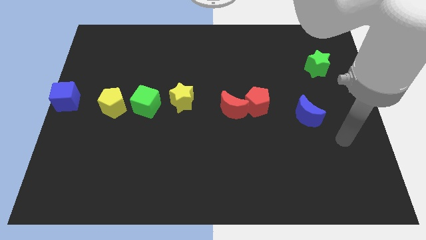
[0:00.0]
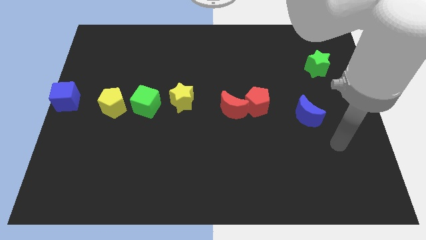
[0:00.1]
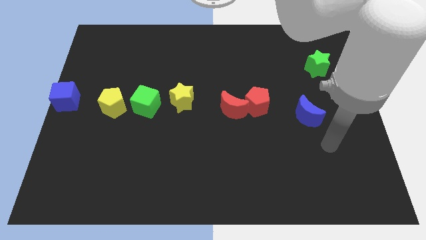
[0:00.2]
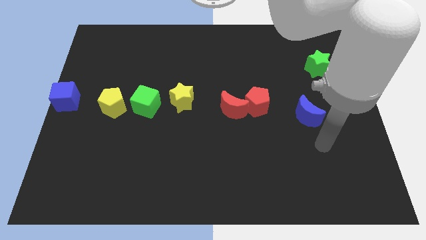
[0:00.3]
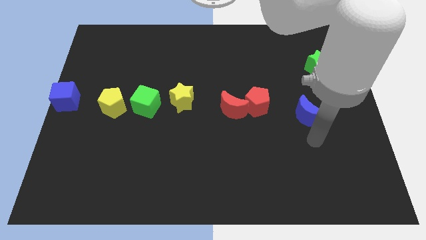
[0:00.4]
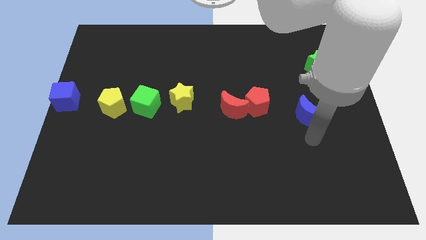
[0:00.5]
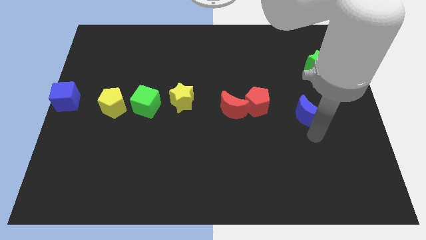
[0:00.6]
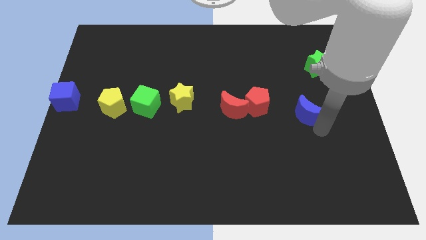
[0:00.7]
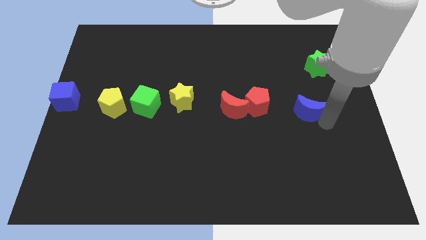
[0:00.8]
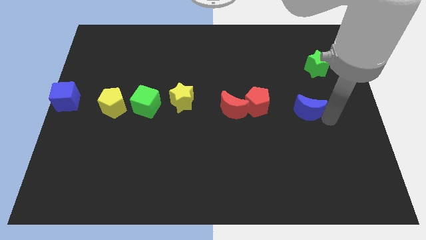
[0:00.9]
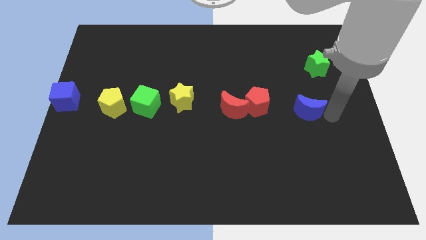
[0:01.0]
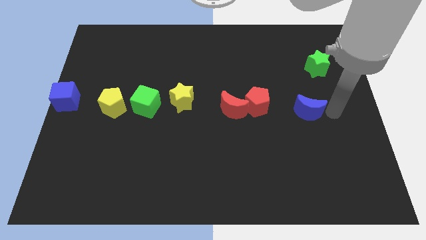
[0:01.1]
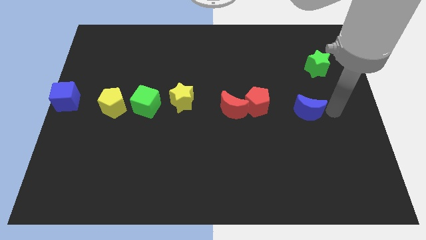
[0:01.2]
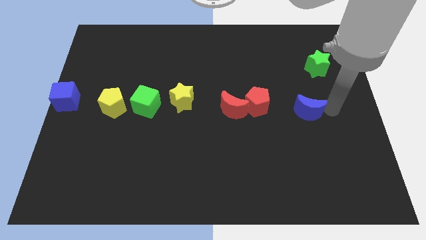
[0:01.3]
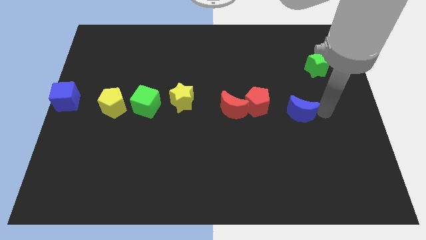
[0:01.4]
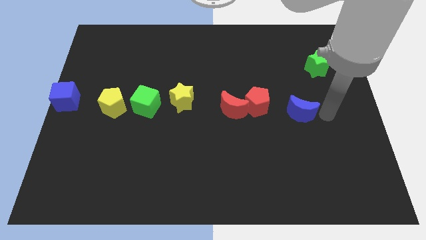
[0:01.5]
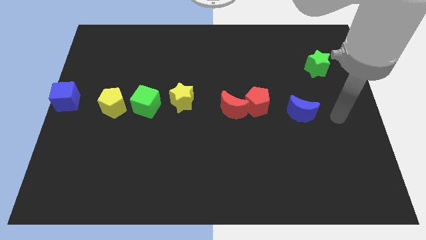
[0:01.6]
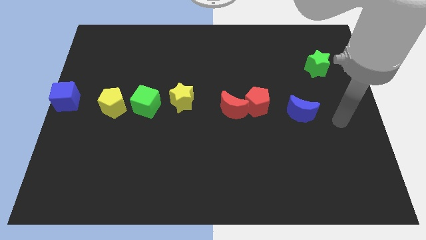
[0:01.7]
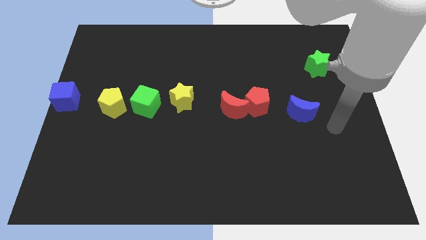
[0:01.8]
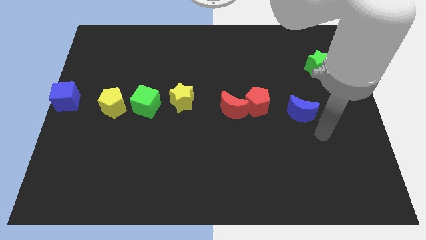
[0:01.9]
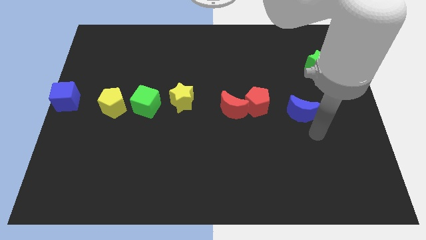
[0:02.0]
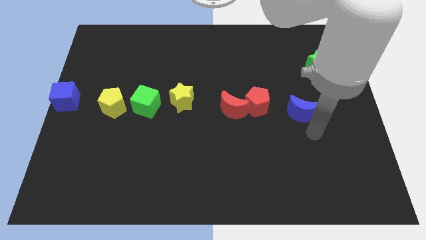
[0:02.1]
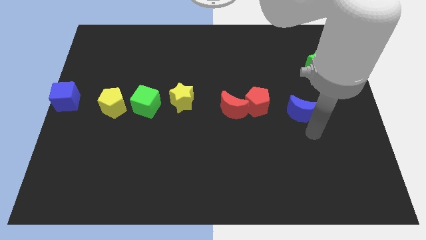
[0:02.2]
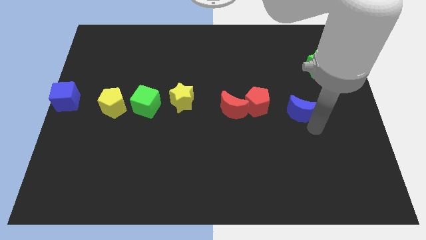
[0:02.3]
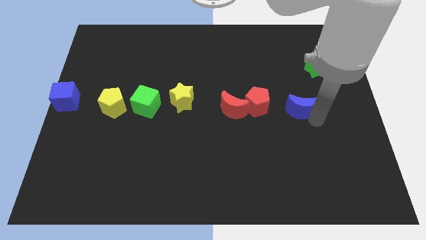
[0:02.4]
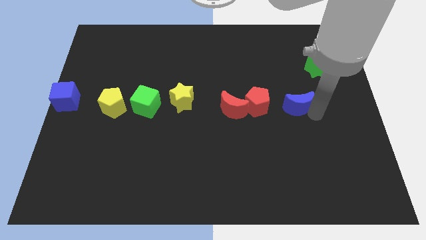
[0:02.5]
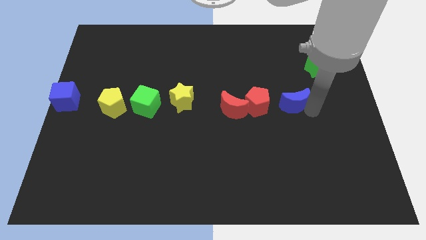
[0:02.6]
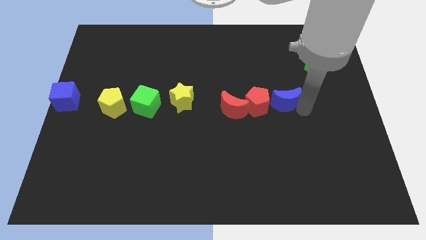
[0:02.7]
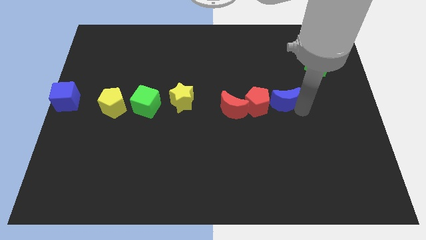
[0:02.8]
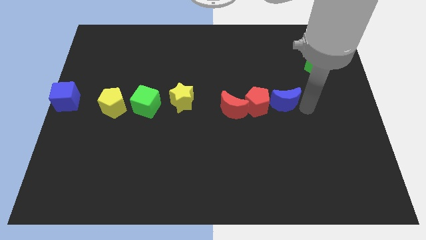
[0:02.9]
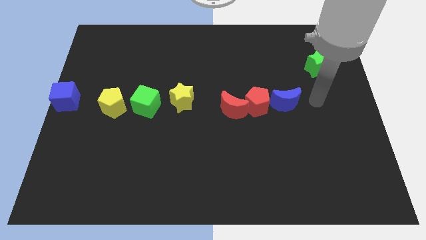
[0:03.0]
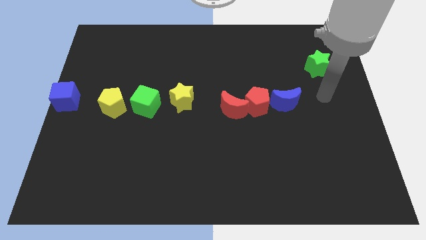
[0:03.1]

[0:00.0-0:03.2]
move the blue crescent close to the group of red blocks

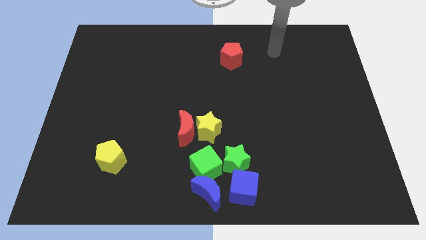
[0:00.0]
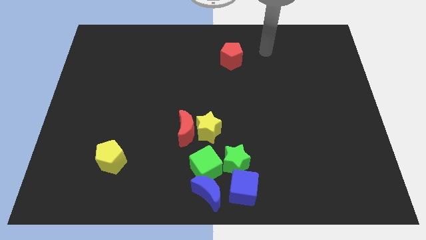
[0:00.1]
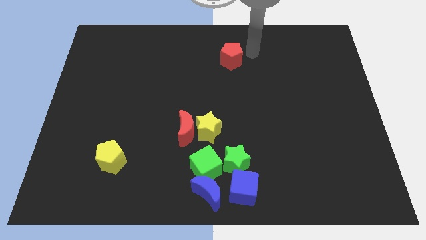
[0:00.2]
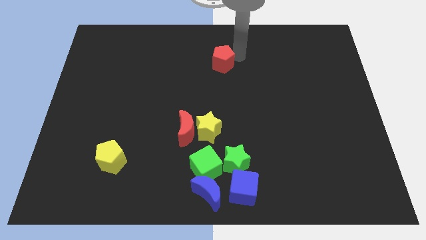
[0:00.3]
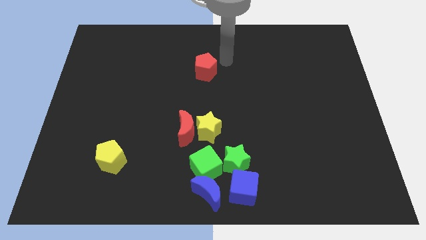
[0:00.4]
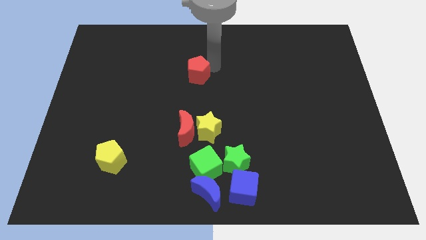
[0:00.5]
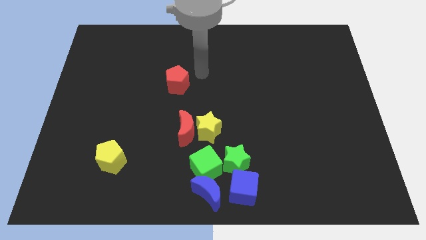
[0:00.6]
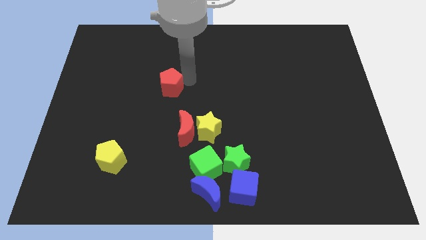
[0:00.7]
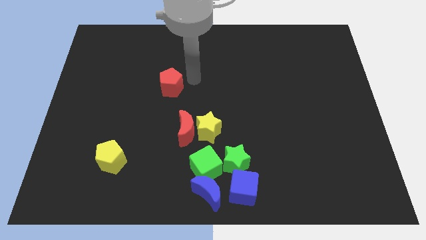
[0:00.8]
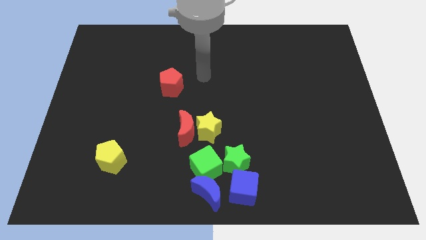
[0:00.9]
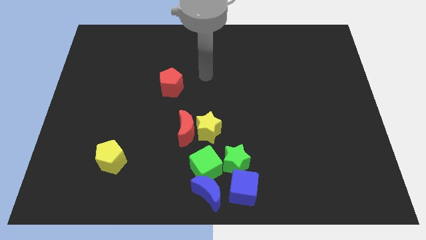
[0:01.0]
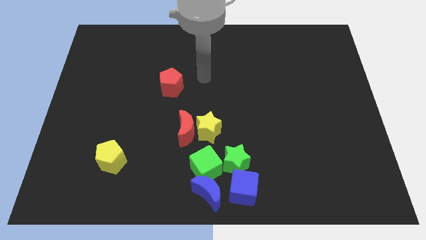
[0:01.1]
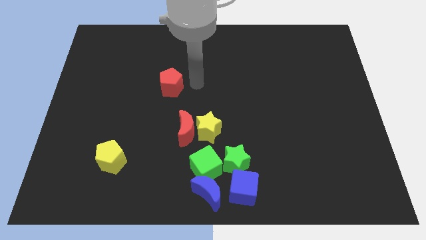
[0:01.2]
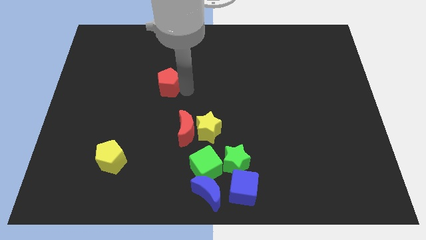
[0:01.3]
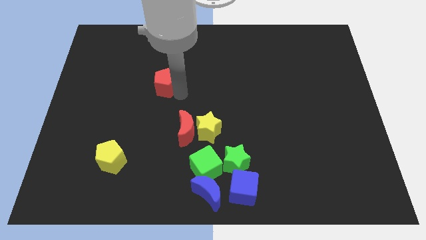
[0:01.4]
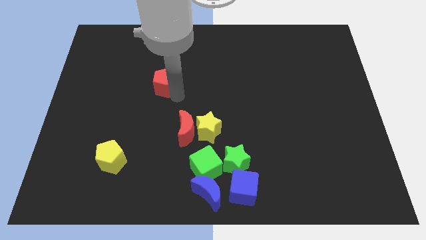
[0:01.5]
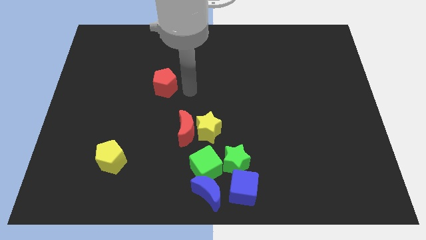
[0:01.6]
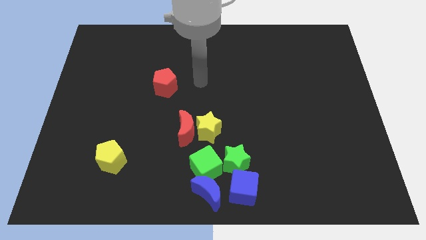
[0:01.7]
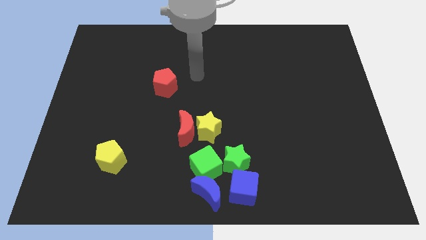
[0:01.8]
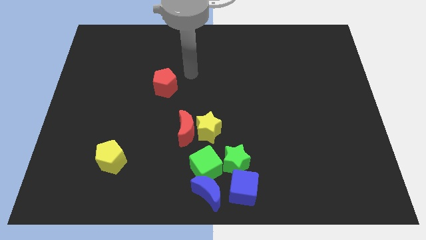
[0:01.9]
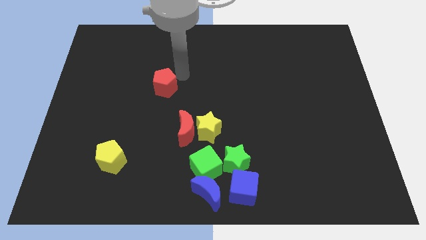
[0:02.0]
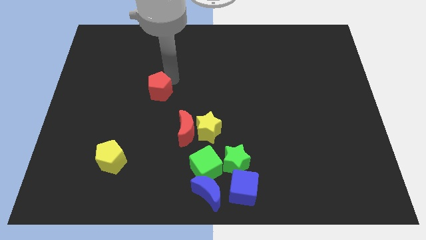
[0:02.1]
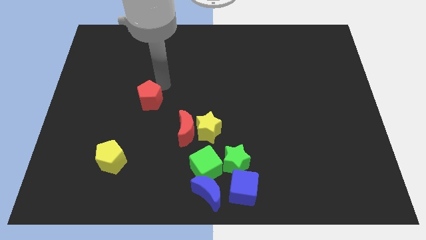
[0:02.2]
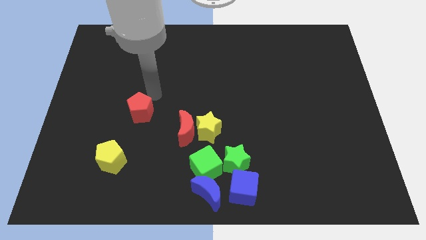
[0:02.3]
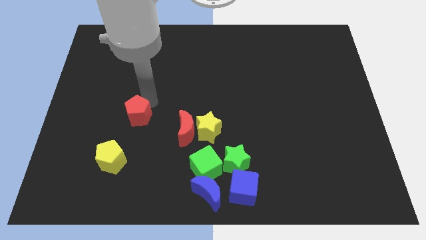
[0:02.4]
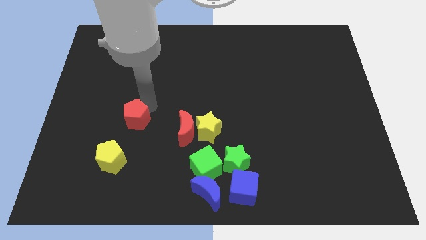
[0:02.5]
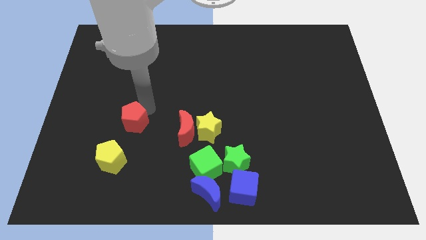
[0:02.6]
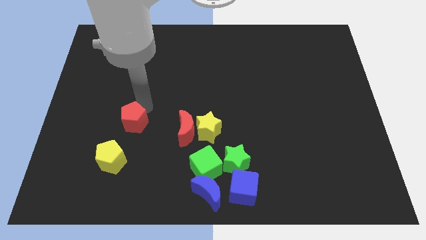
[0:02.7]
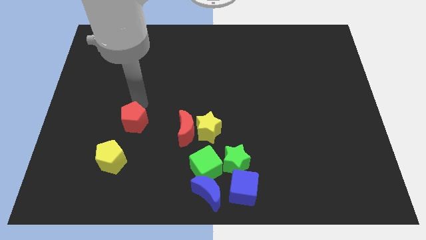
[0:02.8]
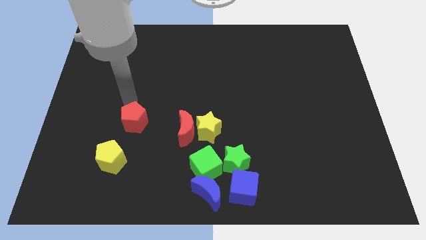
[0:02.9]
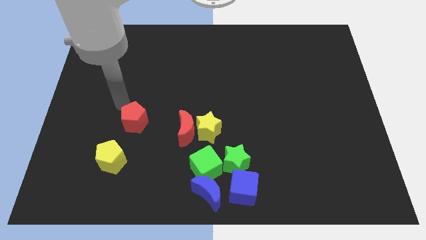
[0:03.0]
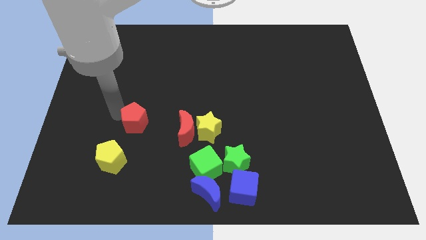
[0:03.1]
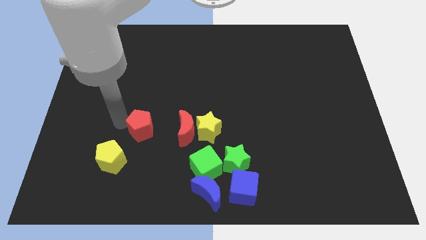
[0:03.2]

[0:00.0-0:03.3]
place the red pentagon at the top right of the yellow pentagon

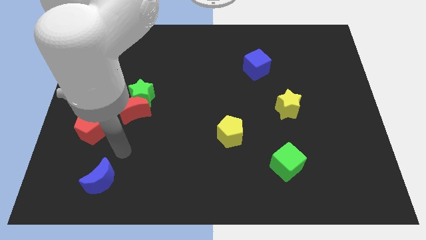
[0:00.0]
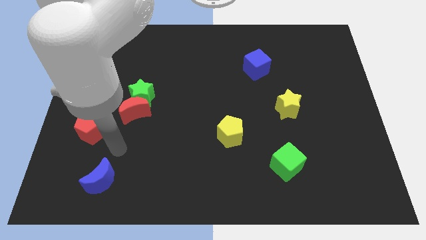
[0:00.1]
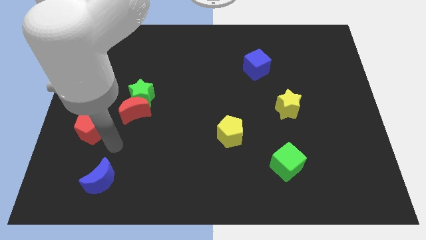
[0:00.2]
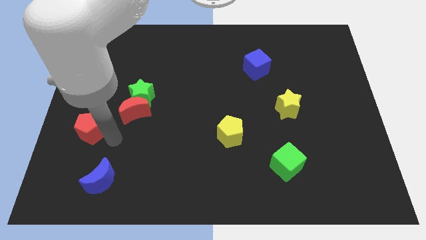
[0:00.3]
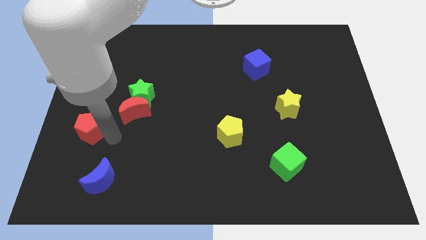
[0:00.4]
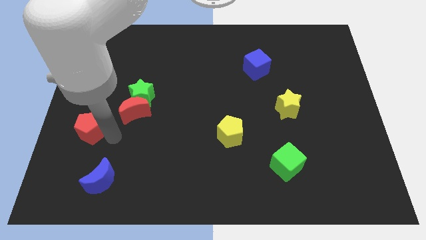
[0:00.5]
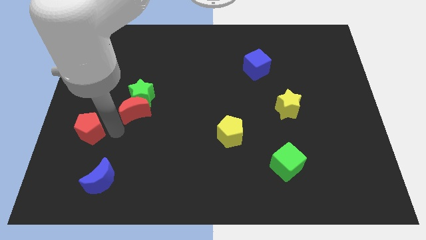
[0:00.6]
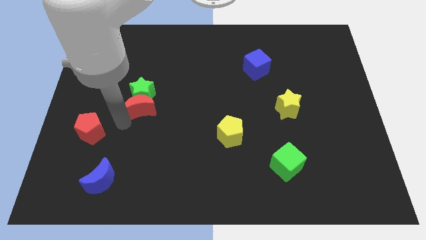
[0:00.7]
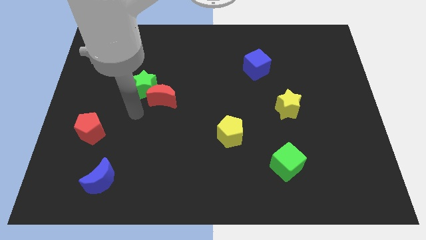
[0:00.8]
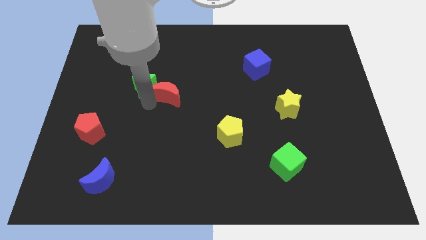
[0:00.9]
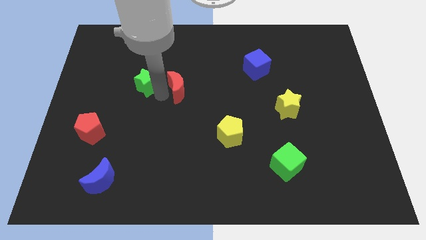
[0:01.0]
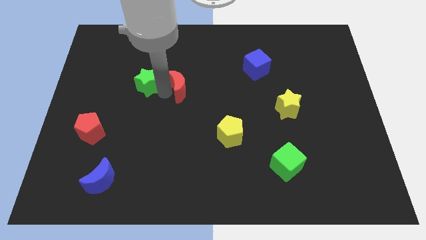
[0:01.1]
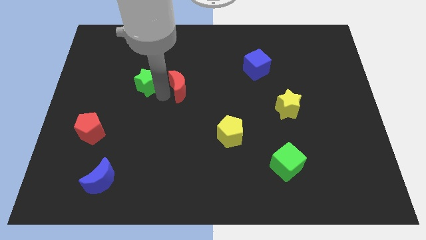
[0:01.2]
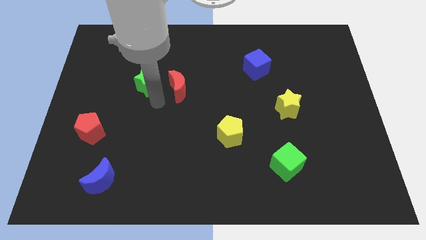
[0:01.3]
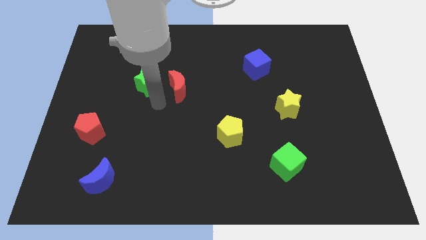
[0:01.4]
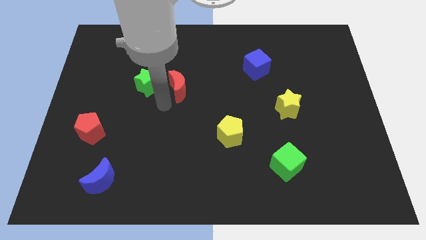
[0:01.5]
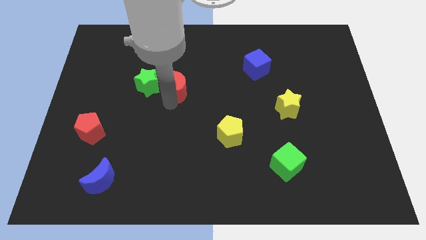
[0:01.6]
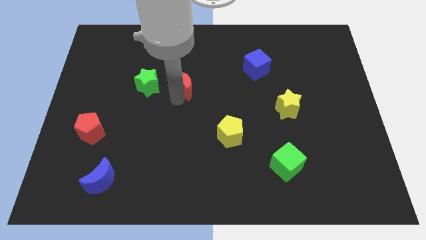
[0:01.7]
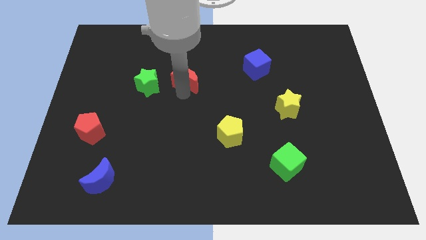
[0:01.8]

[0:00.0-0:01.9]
place the red moon to the right of the star

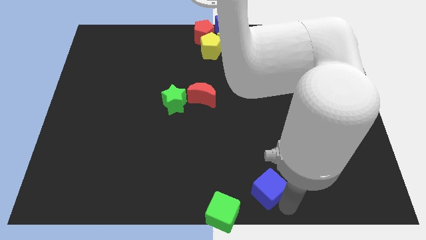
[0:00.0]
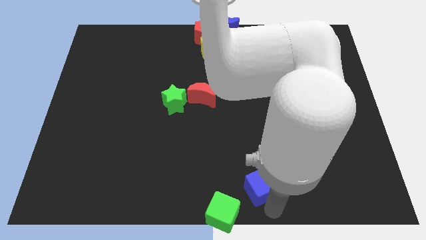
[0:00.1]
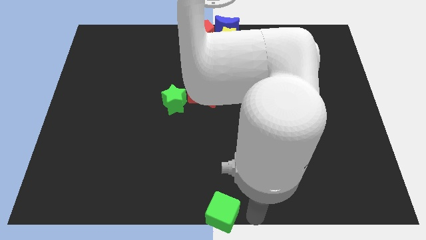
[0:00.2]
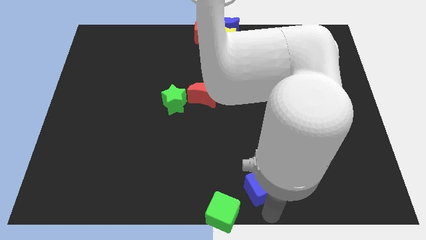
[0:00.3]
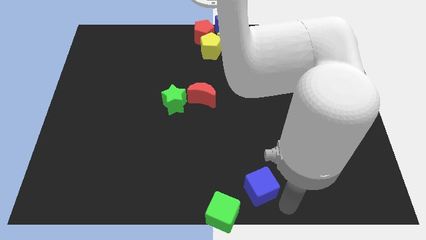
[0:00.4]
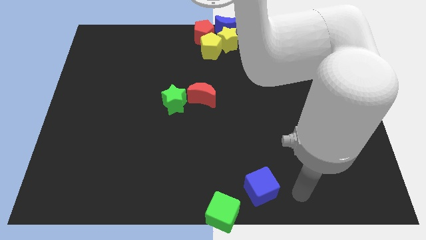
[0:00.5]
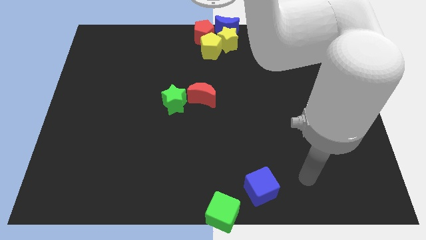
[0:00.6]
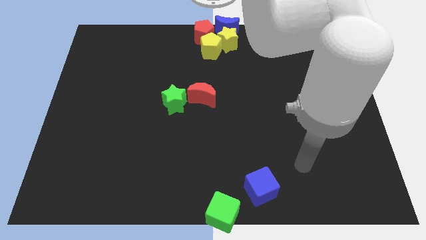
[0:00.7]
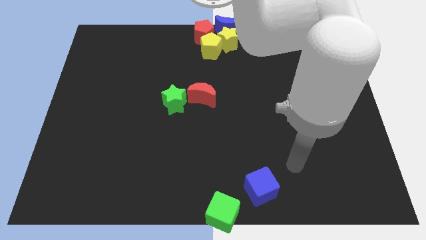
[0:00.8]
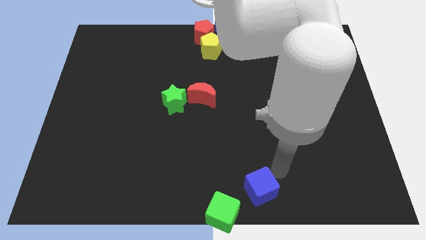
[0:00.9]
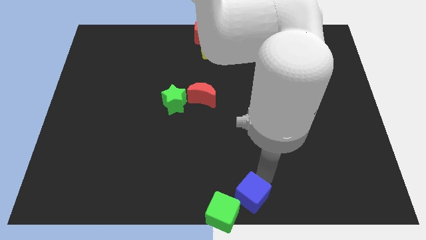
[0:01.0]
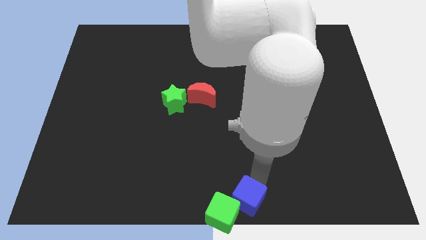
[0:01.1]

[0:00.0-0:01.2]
push the blue block into the green block
